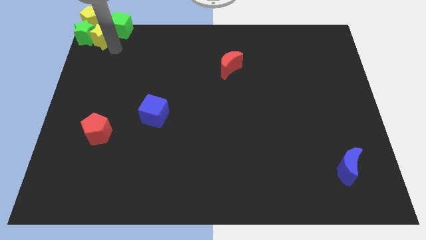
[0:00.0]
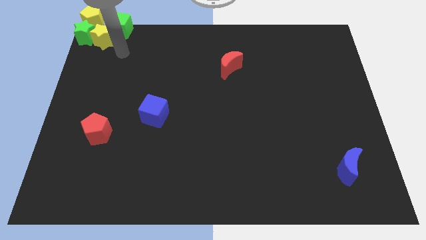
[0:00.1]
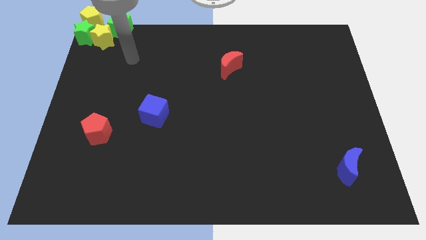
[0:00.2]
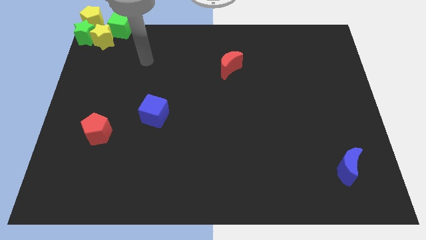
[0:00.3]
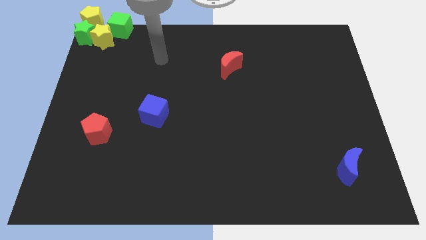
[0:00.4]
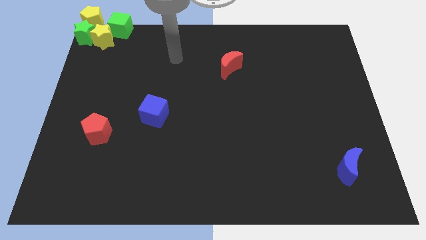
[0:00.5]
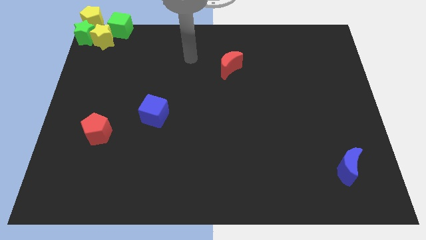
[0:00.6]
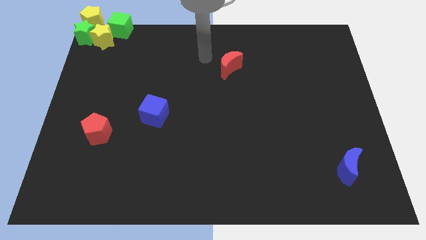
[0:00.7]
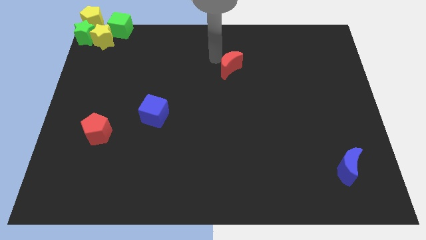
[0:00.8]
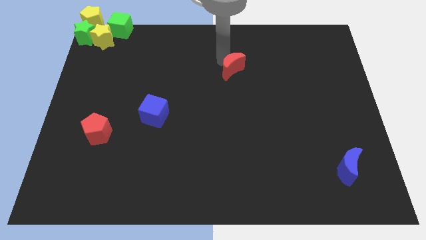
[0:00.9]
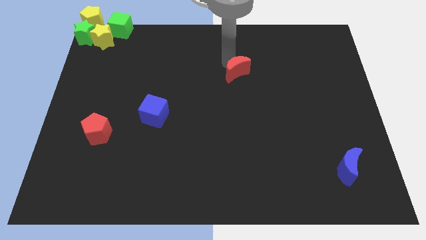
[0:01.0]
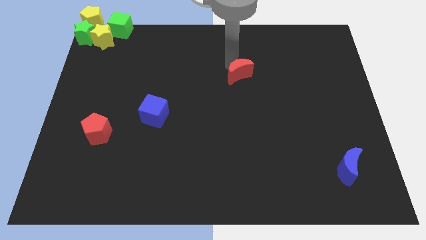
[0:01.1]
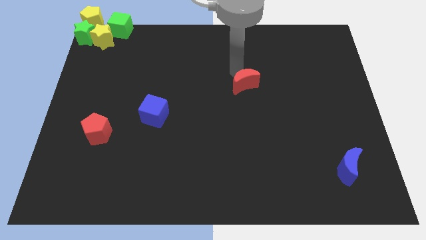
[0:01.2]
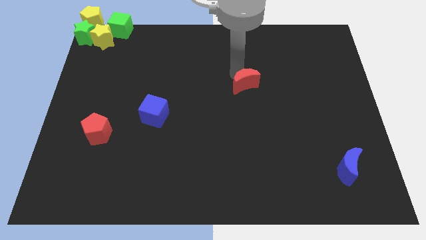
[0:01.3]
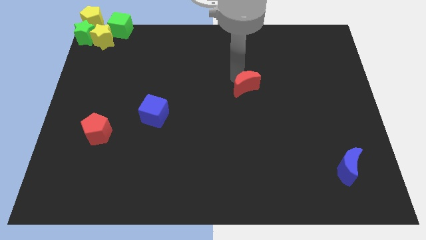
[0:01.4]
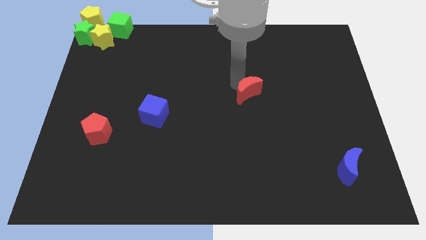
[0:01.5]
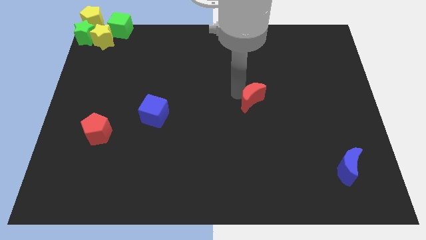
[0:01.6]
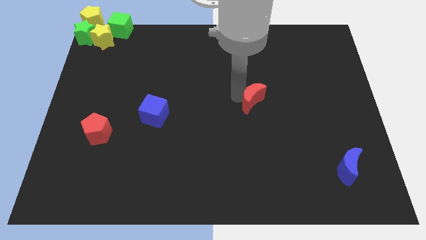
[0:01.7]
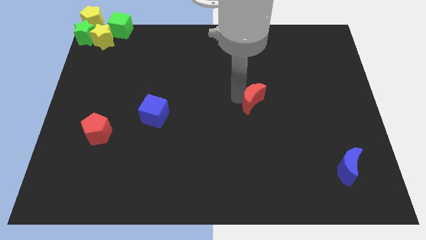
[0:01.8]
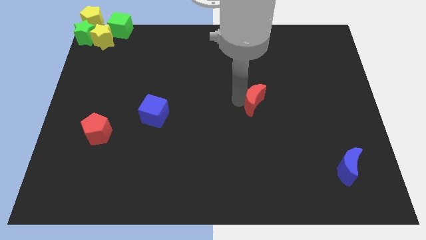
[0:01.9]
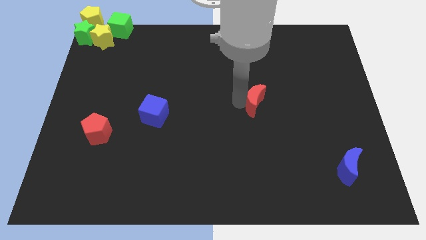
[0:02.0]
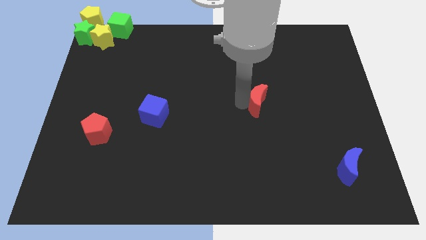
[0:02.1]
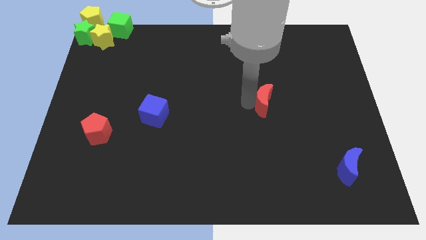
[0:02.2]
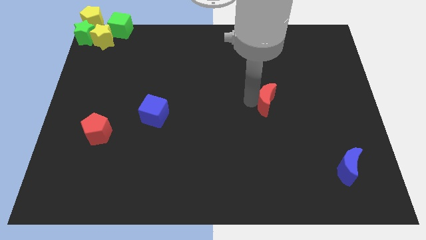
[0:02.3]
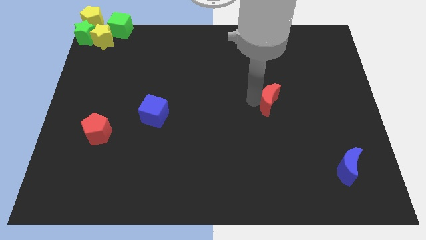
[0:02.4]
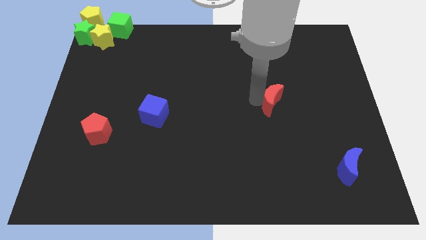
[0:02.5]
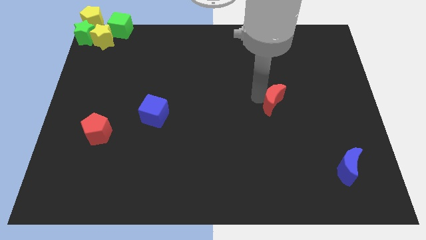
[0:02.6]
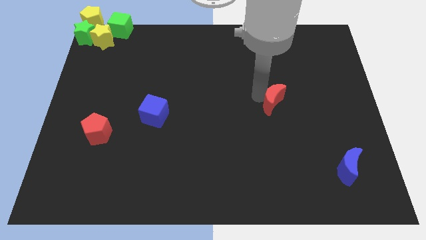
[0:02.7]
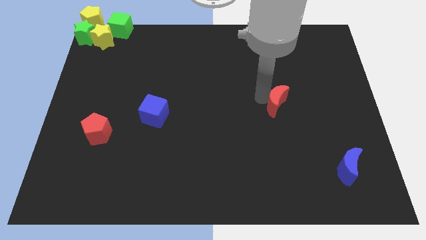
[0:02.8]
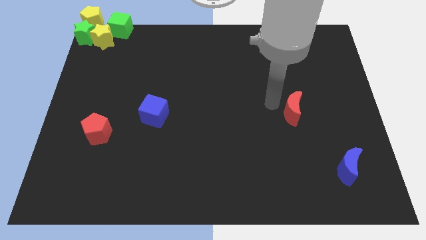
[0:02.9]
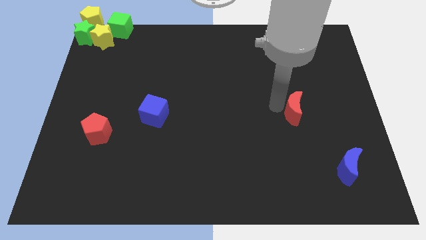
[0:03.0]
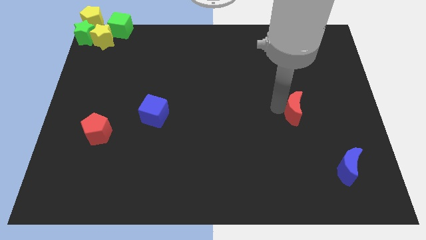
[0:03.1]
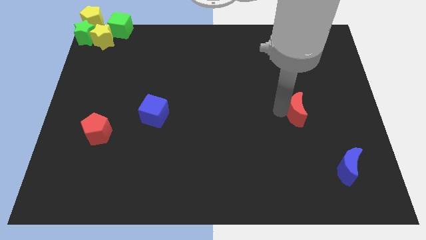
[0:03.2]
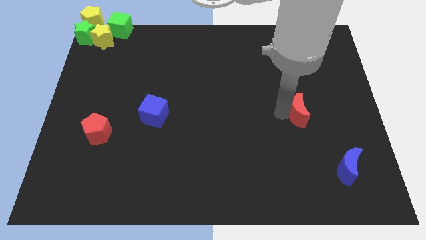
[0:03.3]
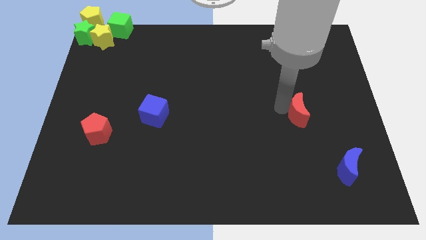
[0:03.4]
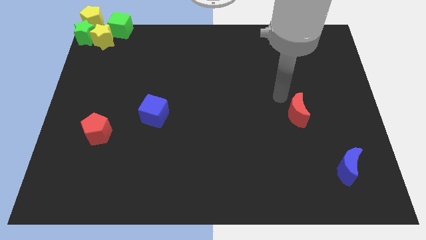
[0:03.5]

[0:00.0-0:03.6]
push the red crescent to the top left of the blue crescent

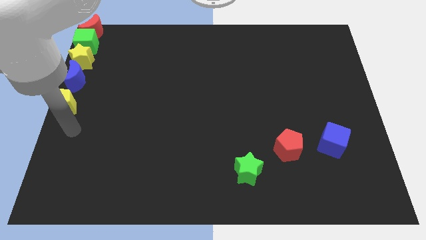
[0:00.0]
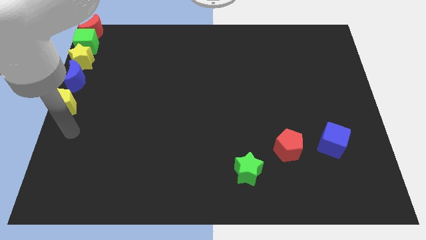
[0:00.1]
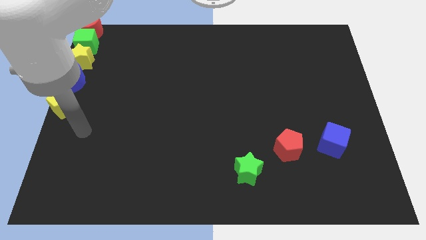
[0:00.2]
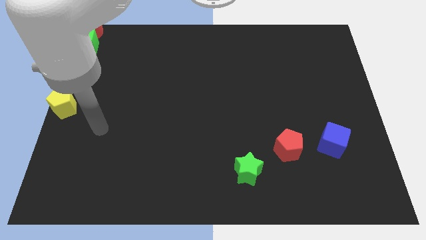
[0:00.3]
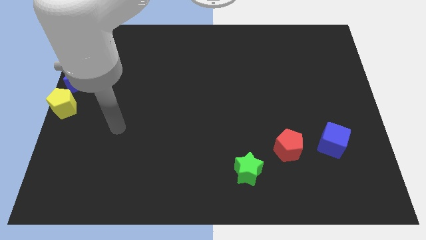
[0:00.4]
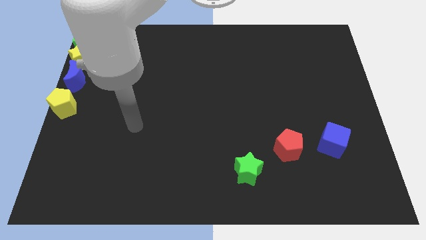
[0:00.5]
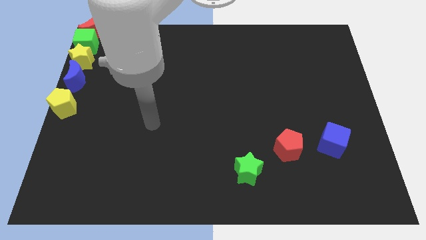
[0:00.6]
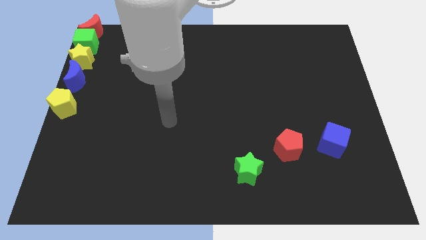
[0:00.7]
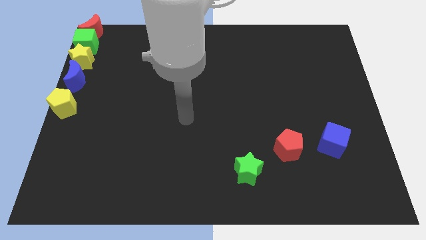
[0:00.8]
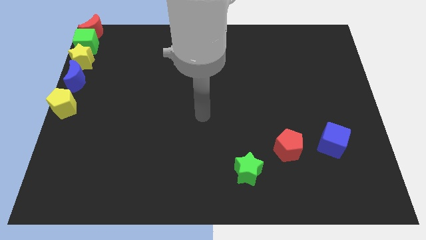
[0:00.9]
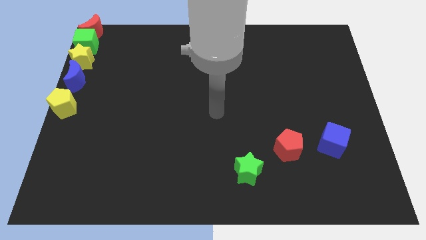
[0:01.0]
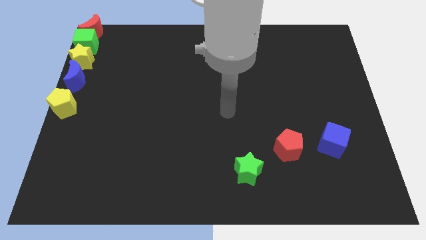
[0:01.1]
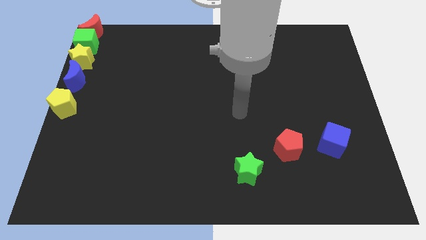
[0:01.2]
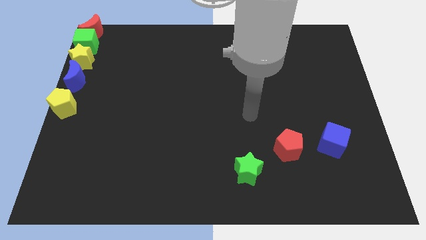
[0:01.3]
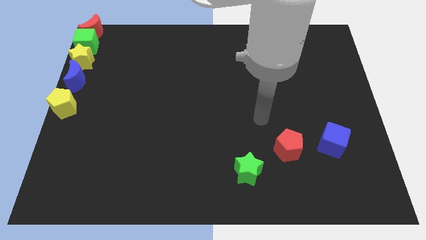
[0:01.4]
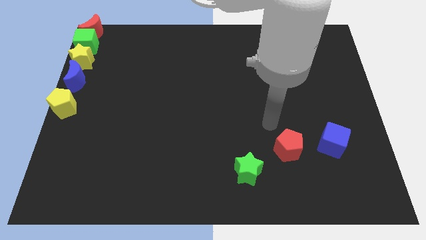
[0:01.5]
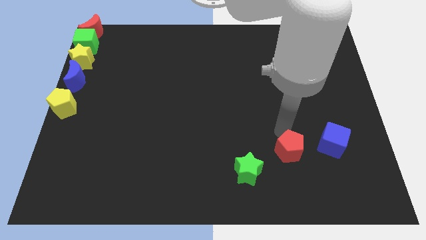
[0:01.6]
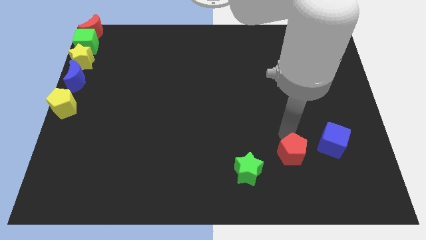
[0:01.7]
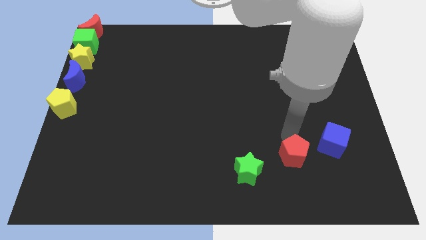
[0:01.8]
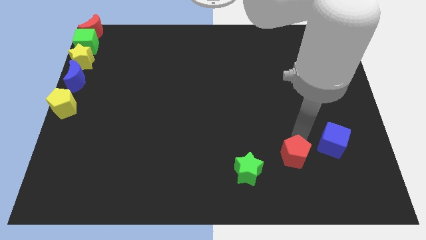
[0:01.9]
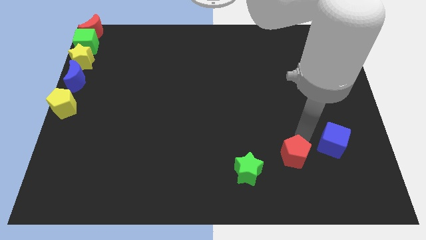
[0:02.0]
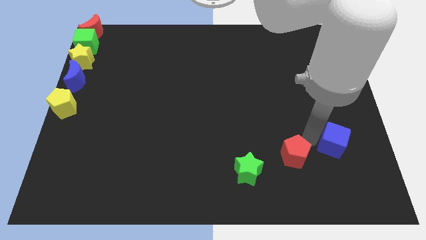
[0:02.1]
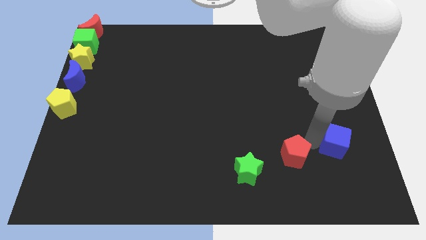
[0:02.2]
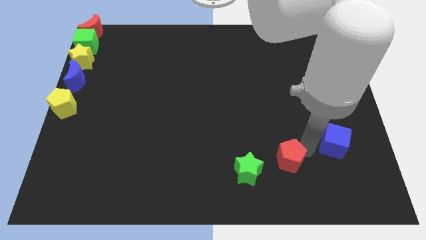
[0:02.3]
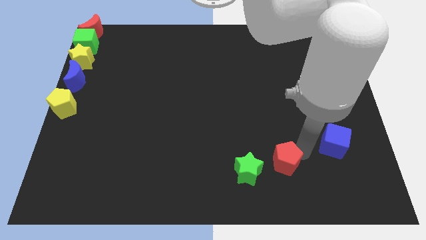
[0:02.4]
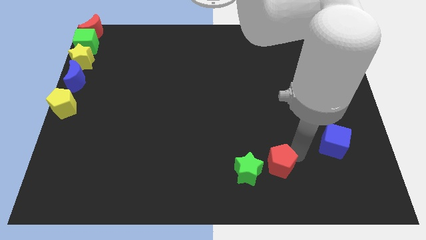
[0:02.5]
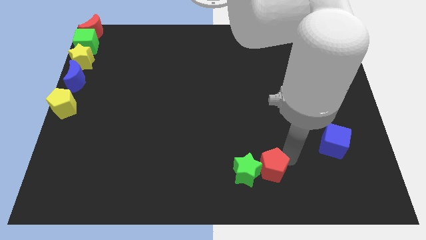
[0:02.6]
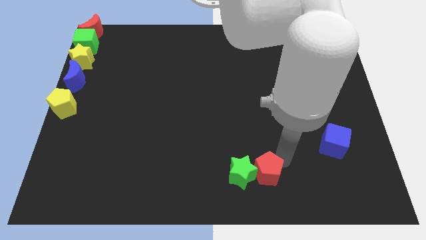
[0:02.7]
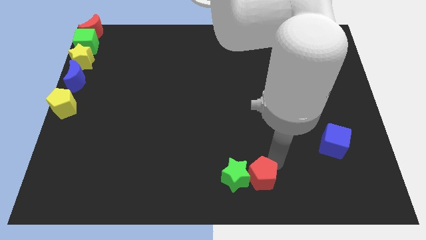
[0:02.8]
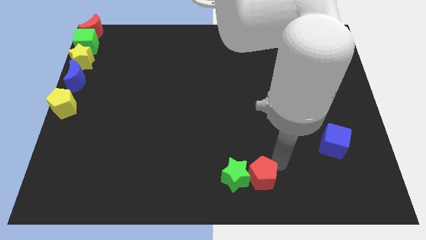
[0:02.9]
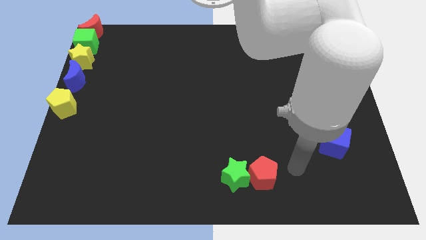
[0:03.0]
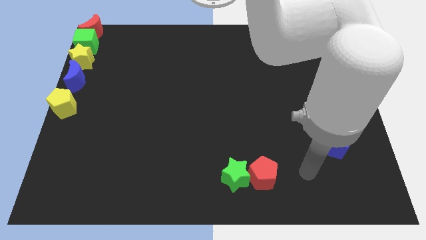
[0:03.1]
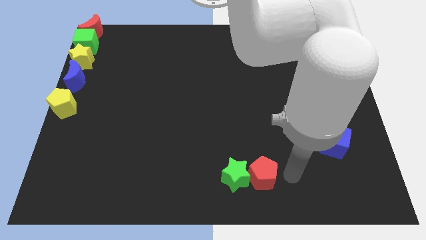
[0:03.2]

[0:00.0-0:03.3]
move the red pentagon right to the green star

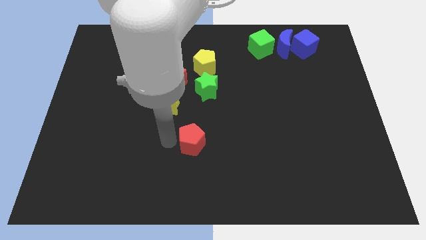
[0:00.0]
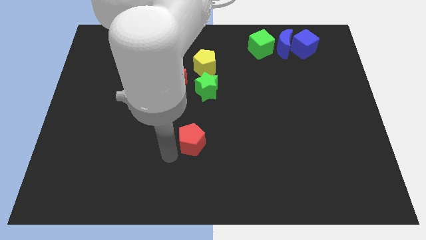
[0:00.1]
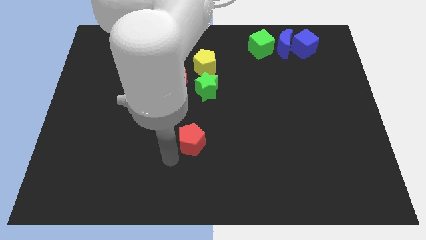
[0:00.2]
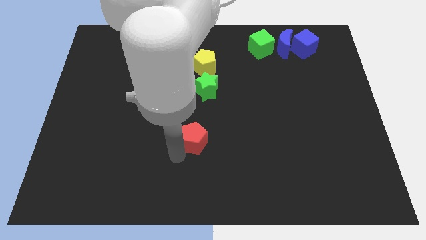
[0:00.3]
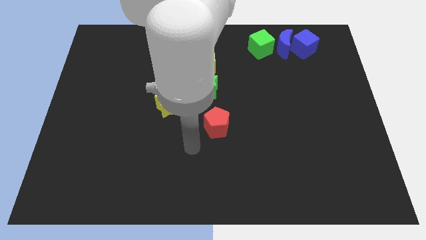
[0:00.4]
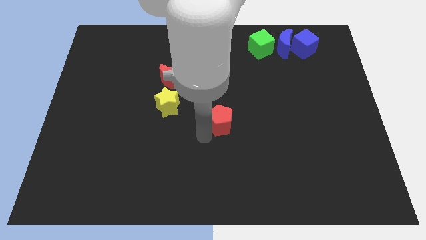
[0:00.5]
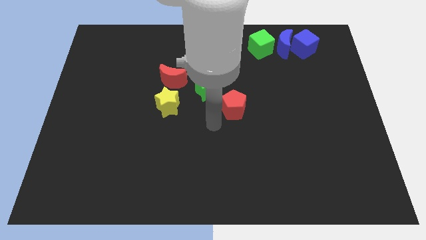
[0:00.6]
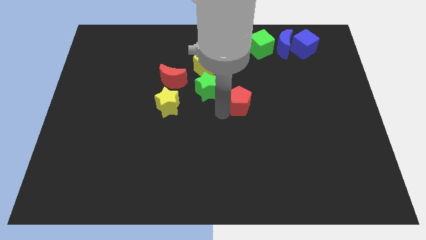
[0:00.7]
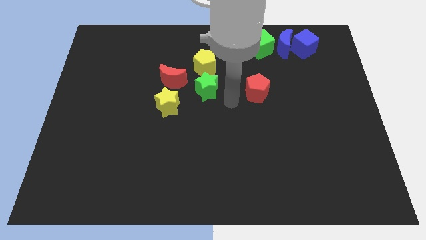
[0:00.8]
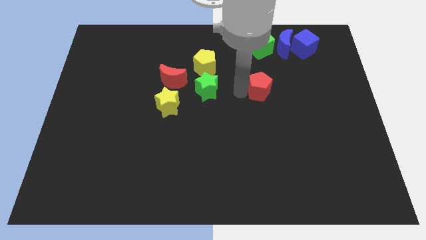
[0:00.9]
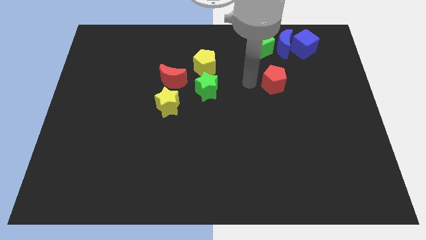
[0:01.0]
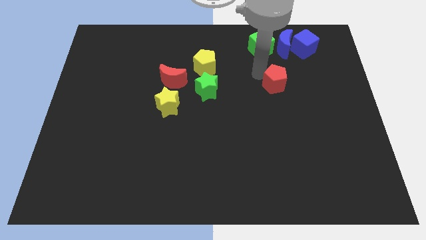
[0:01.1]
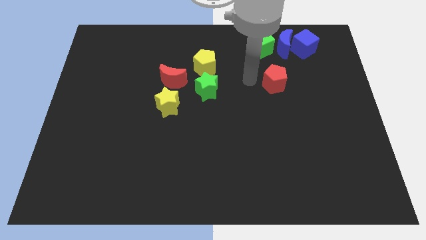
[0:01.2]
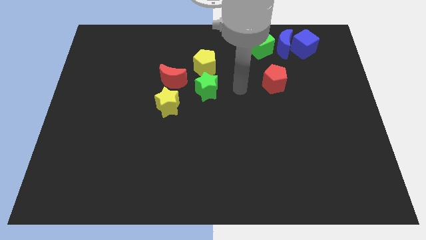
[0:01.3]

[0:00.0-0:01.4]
move the red pentagon below the green cube

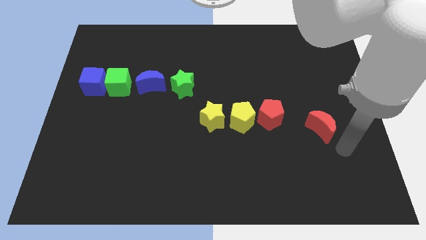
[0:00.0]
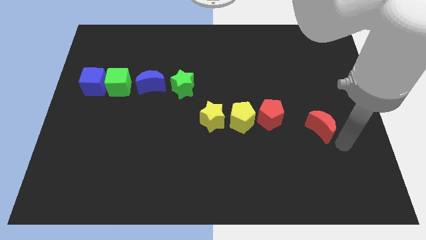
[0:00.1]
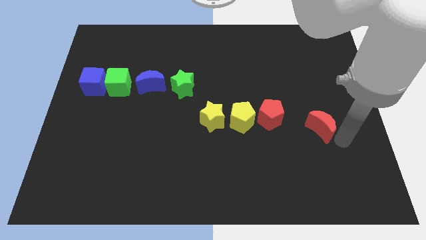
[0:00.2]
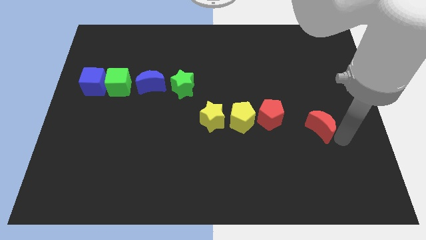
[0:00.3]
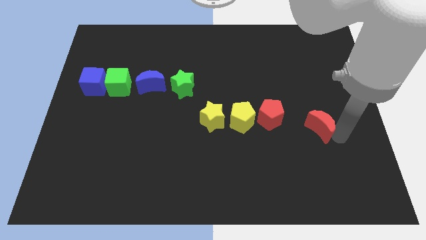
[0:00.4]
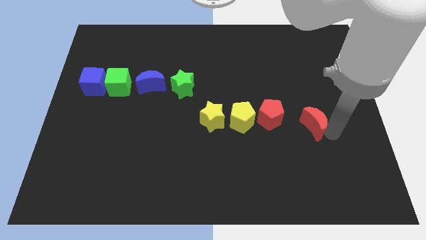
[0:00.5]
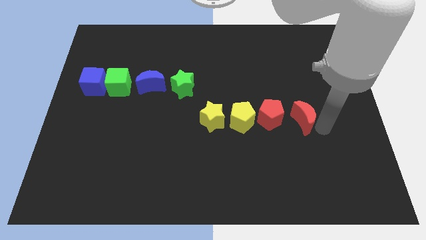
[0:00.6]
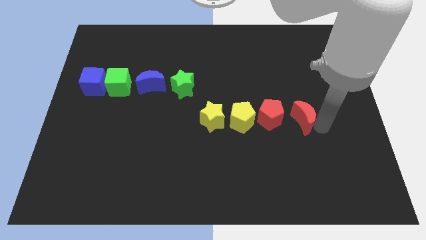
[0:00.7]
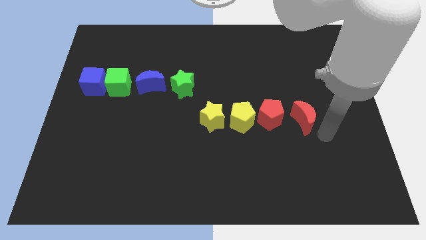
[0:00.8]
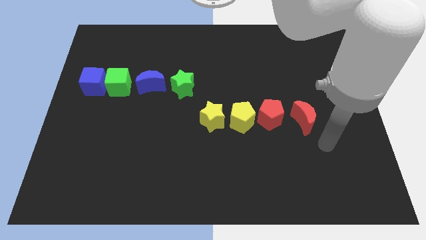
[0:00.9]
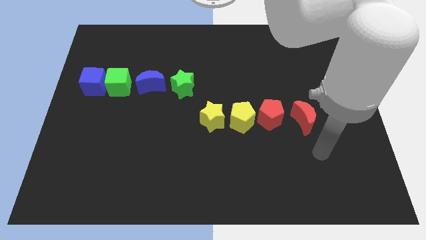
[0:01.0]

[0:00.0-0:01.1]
push the red crescent to the right of the red pentagon
